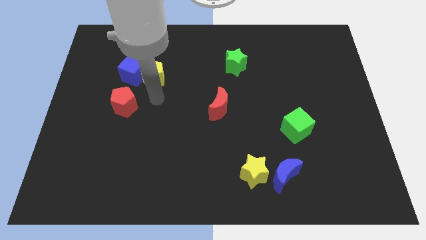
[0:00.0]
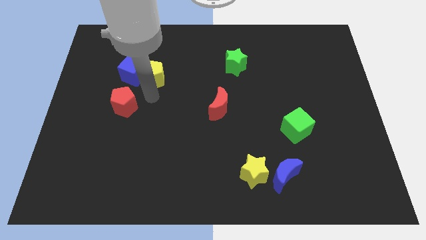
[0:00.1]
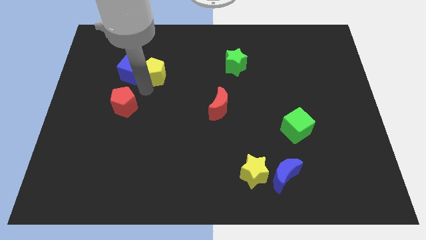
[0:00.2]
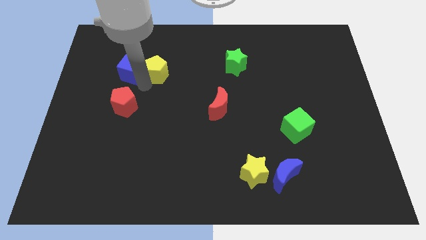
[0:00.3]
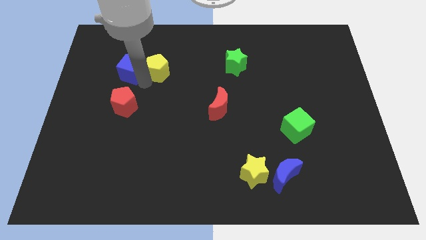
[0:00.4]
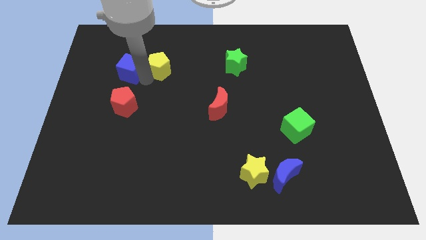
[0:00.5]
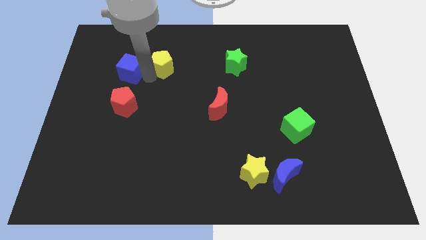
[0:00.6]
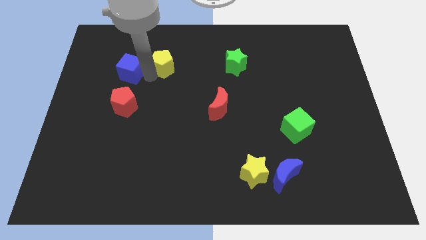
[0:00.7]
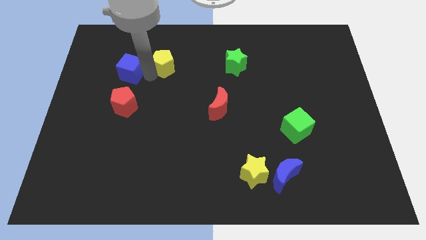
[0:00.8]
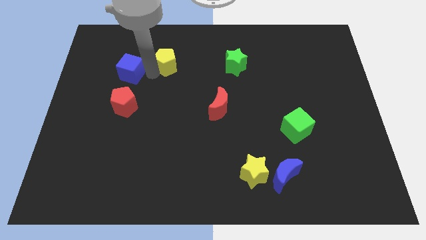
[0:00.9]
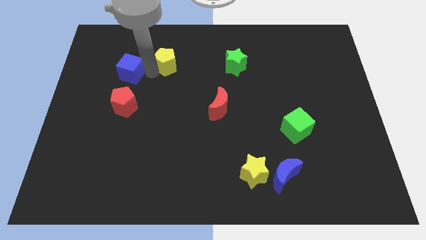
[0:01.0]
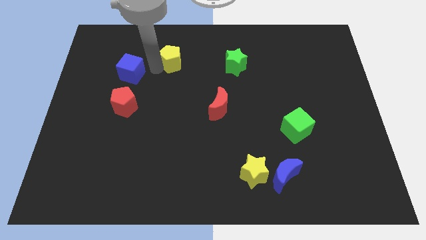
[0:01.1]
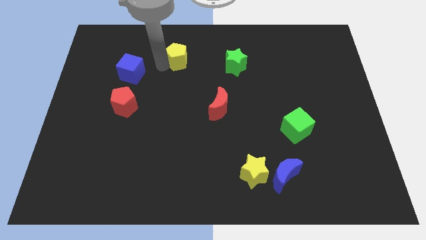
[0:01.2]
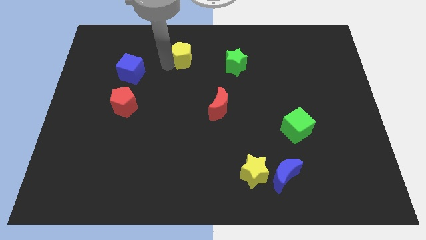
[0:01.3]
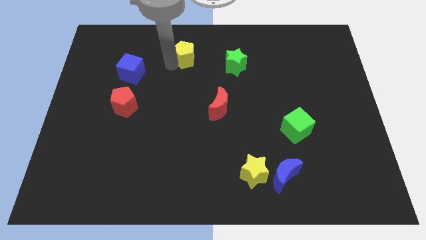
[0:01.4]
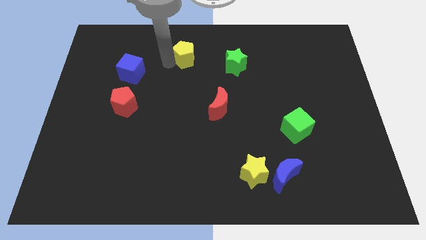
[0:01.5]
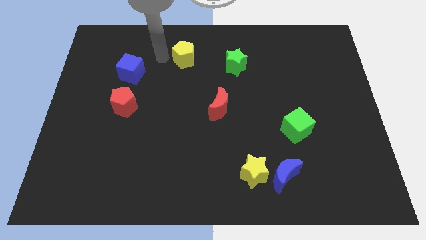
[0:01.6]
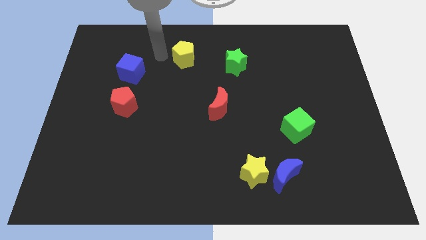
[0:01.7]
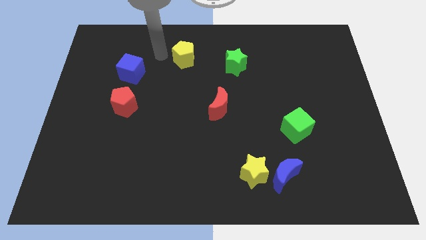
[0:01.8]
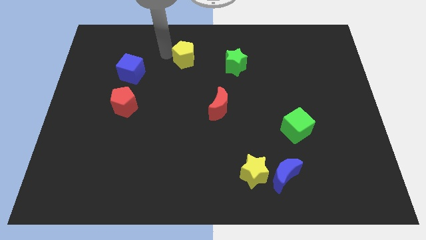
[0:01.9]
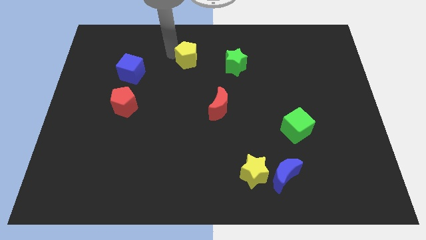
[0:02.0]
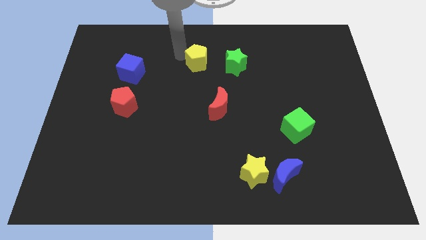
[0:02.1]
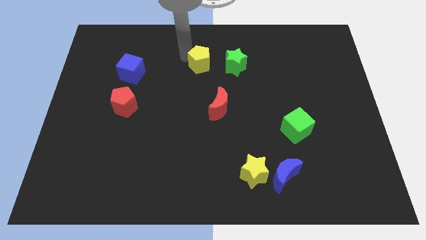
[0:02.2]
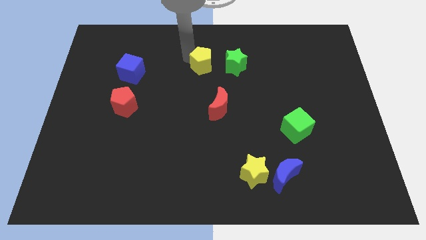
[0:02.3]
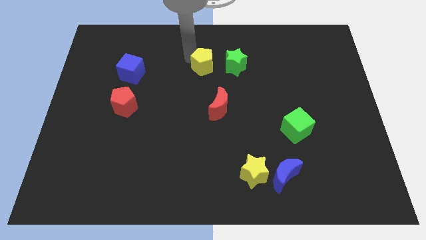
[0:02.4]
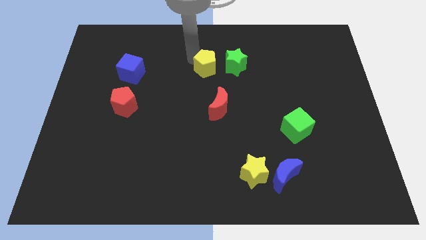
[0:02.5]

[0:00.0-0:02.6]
separate yellow pentagon from blue cube

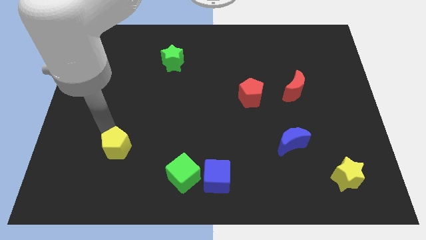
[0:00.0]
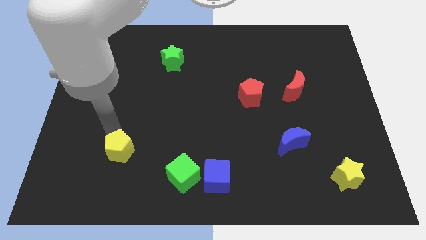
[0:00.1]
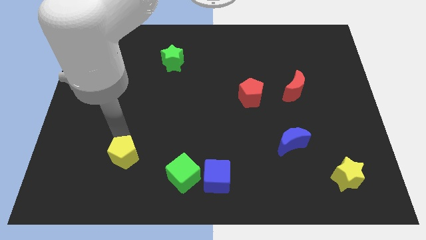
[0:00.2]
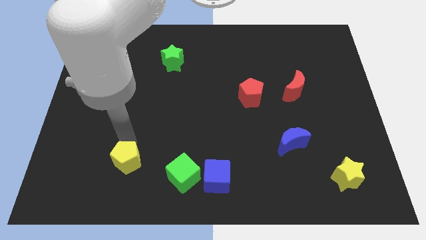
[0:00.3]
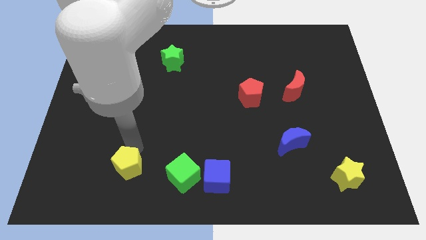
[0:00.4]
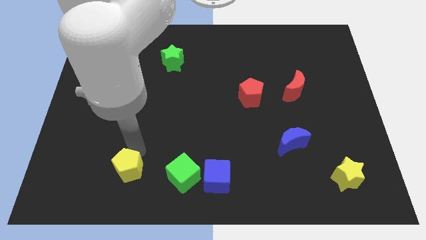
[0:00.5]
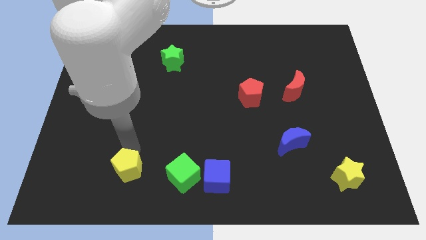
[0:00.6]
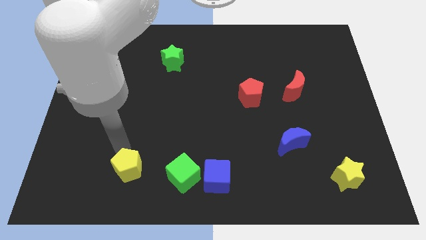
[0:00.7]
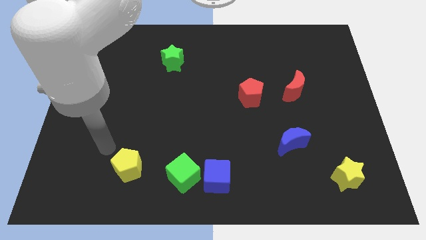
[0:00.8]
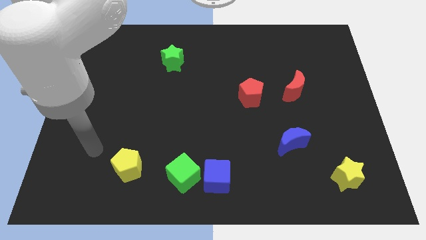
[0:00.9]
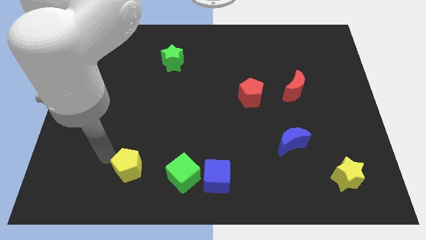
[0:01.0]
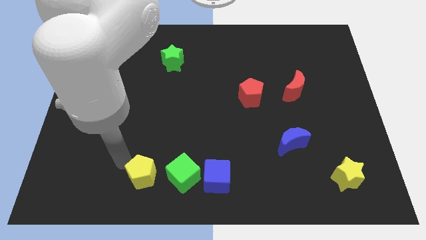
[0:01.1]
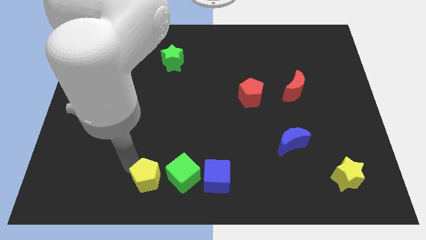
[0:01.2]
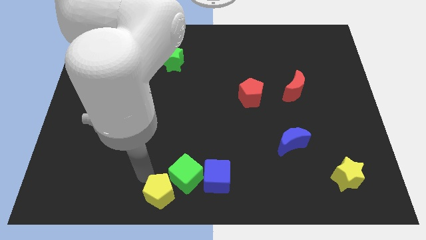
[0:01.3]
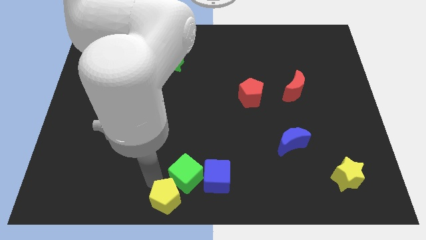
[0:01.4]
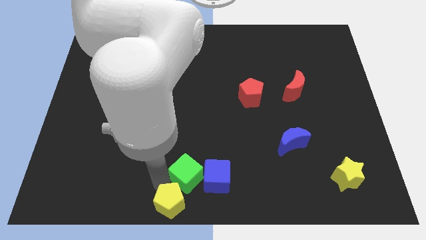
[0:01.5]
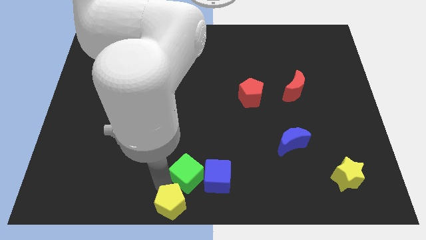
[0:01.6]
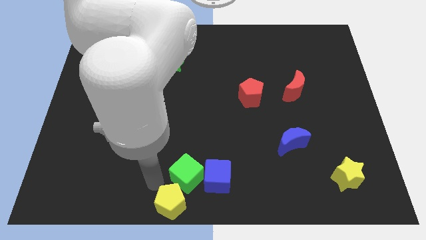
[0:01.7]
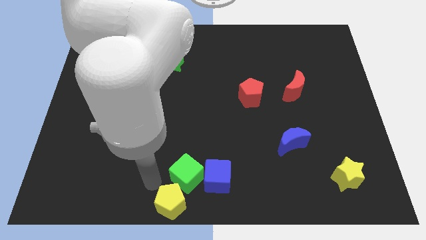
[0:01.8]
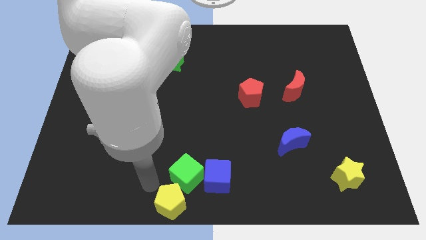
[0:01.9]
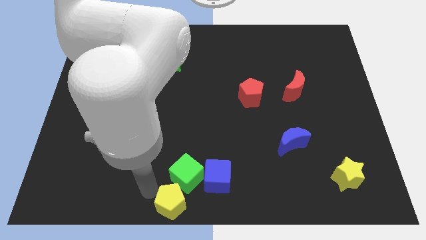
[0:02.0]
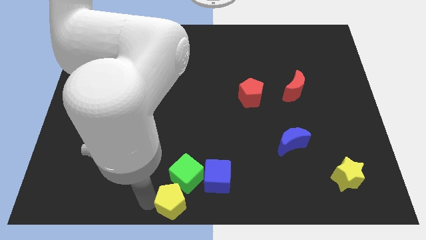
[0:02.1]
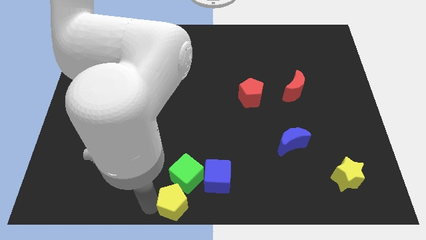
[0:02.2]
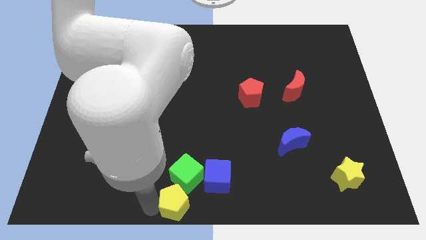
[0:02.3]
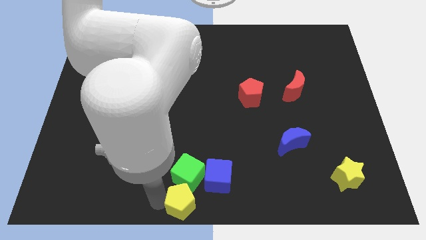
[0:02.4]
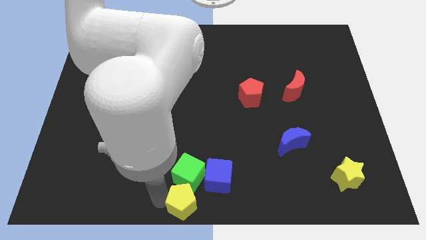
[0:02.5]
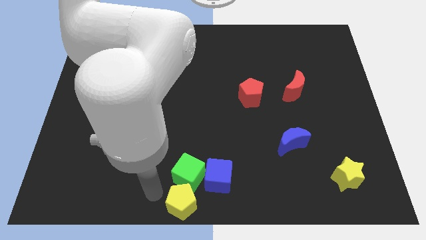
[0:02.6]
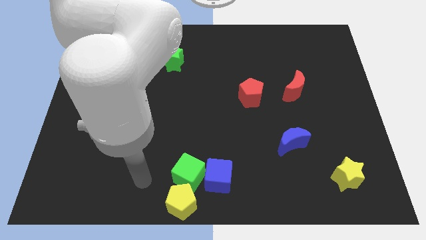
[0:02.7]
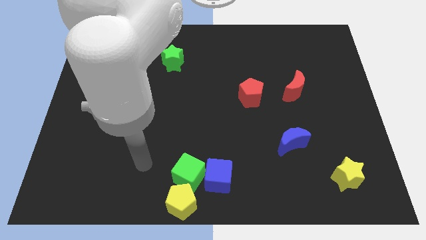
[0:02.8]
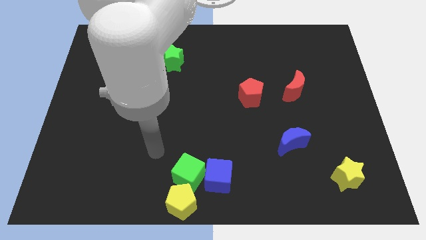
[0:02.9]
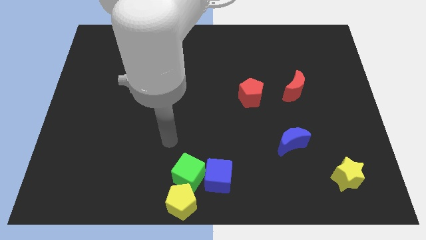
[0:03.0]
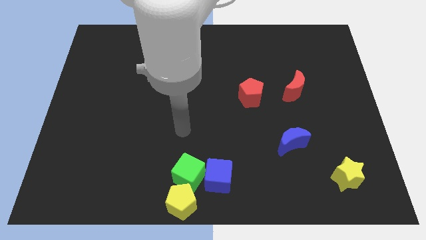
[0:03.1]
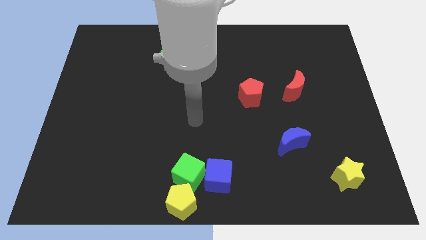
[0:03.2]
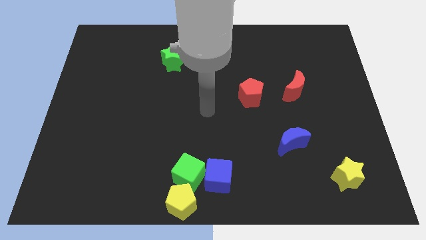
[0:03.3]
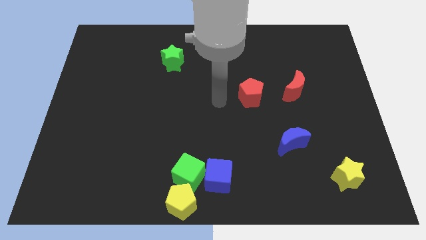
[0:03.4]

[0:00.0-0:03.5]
push the yellow pentagon into green cube

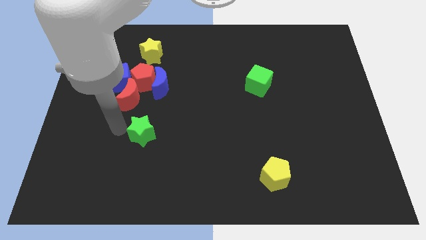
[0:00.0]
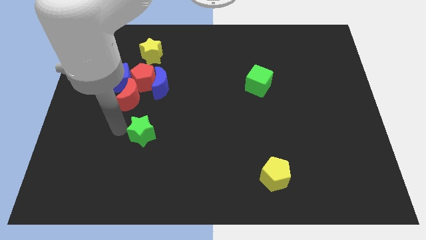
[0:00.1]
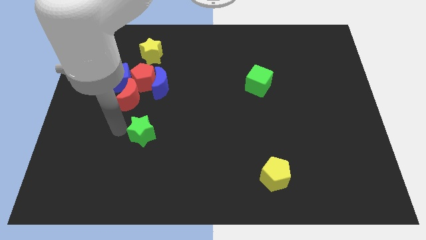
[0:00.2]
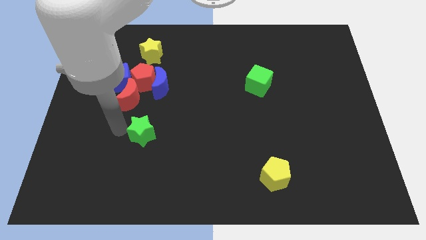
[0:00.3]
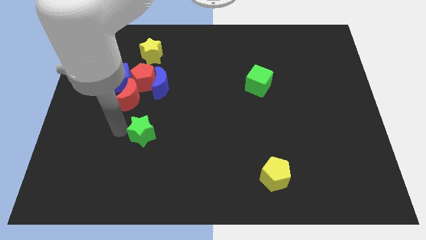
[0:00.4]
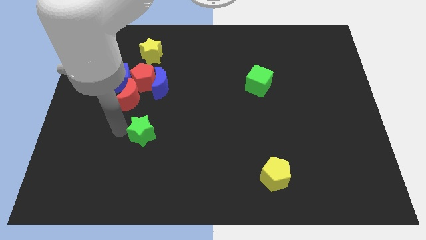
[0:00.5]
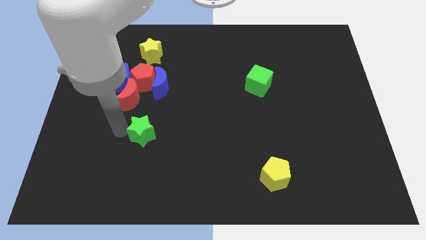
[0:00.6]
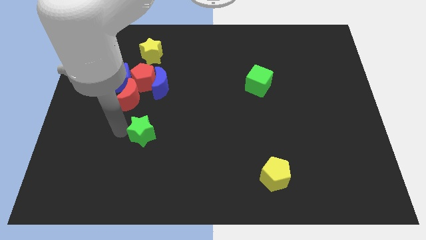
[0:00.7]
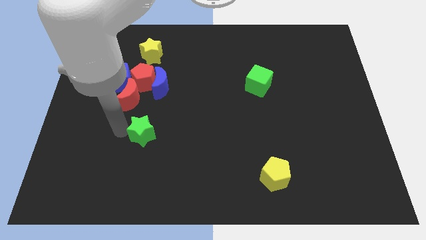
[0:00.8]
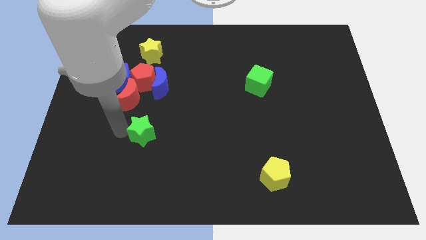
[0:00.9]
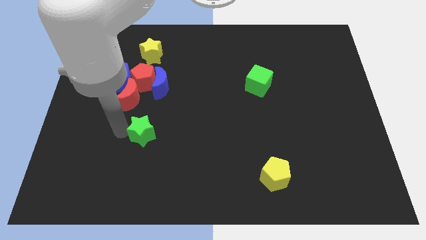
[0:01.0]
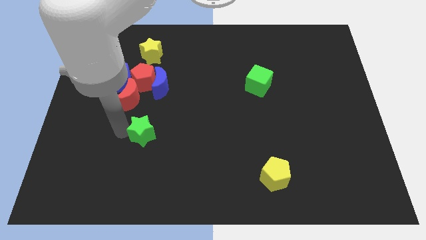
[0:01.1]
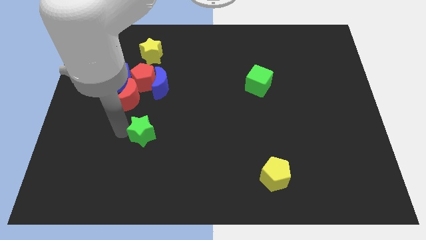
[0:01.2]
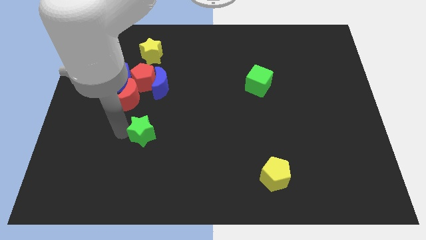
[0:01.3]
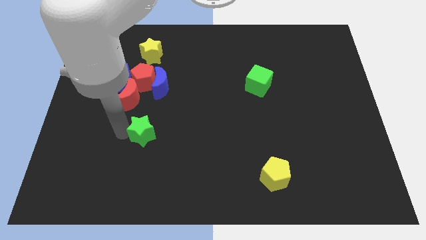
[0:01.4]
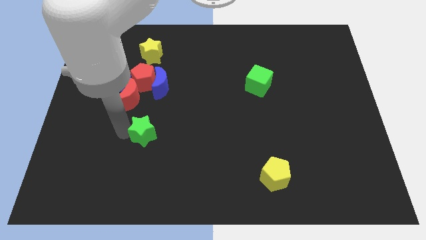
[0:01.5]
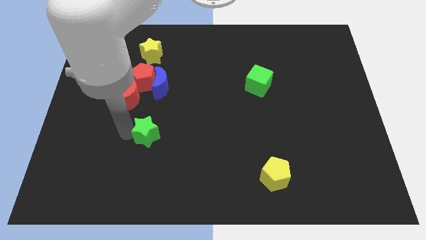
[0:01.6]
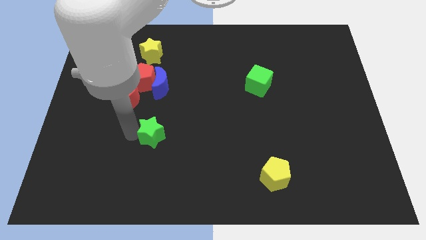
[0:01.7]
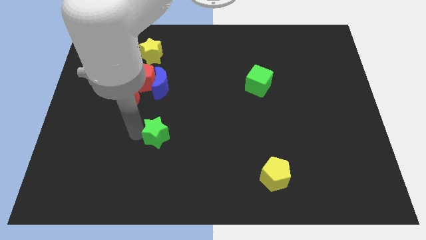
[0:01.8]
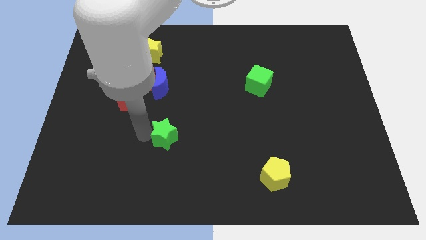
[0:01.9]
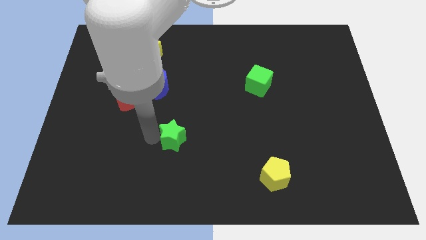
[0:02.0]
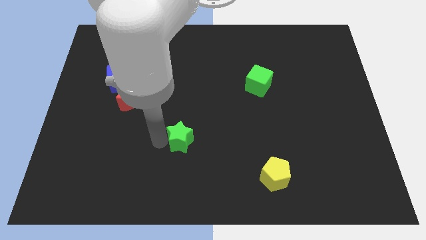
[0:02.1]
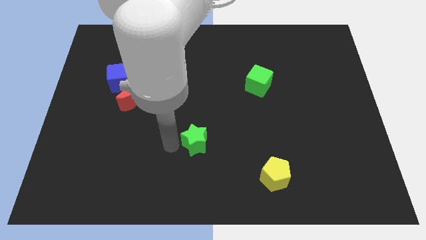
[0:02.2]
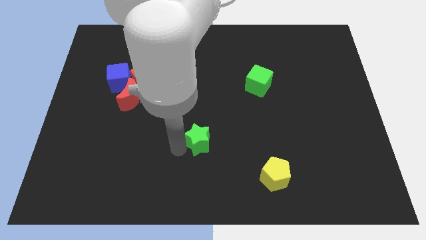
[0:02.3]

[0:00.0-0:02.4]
slightly push the green star

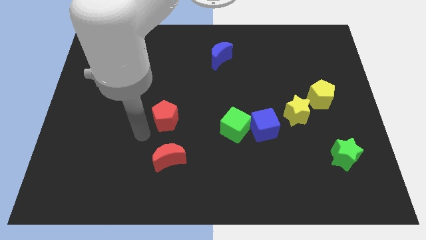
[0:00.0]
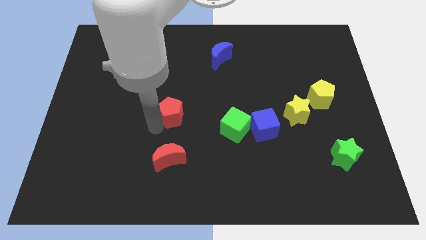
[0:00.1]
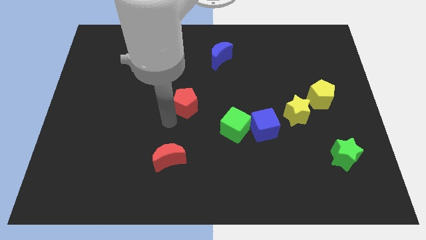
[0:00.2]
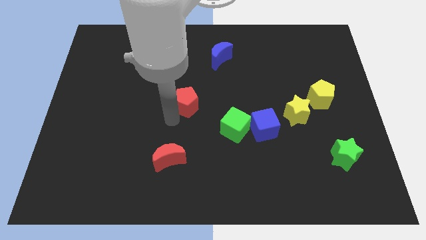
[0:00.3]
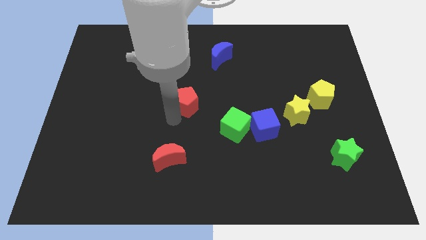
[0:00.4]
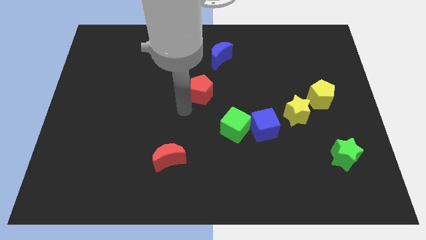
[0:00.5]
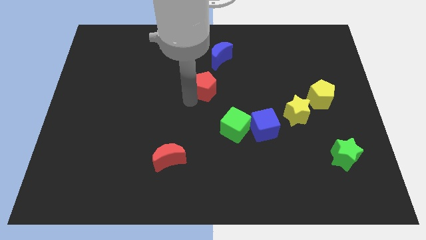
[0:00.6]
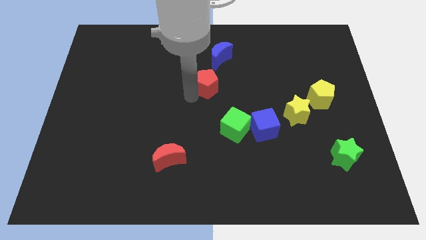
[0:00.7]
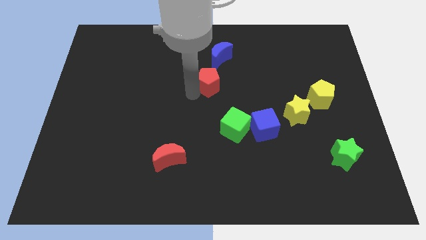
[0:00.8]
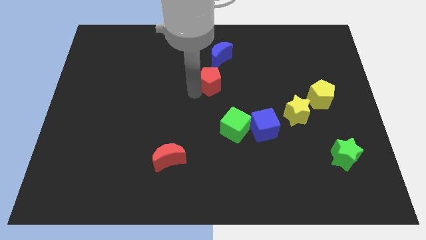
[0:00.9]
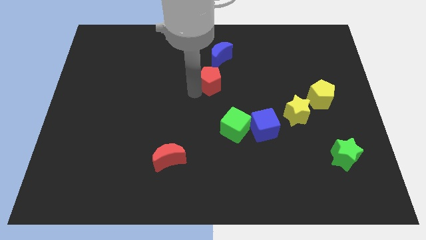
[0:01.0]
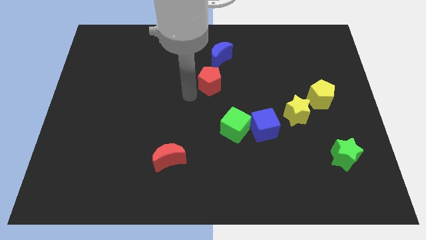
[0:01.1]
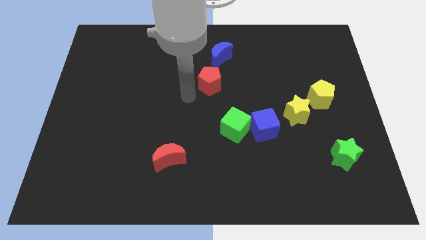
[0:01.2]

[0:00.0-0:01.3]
take the red pentagon close to the blue moon
